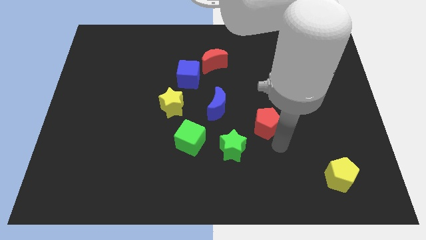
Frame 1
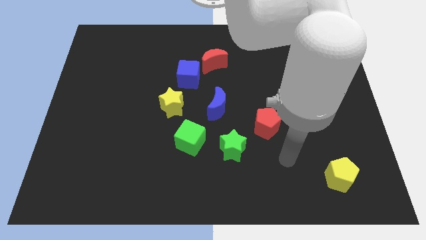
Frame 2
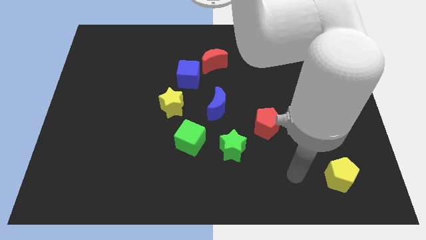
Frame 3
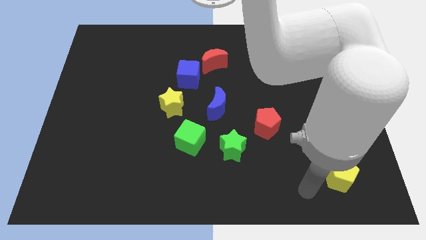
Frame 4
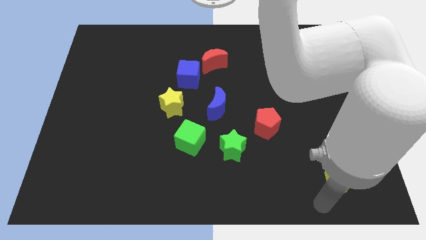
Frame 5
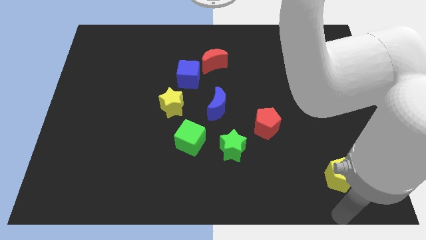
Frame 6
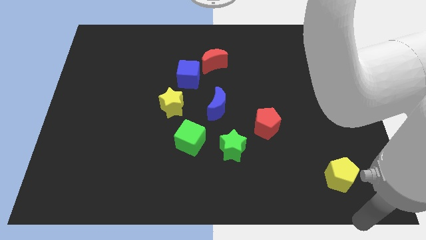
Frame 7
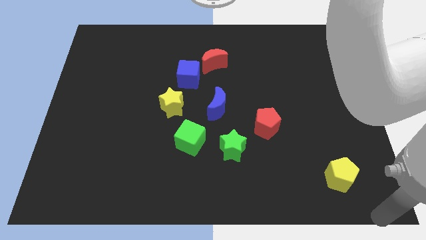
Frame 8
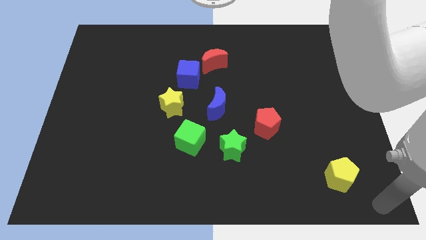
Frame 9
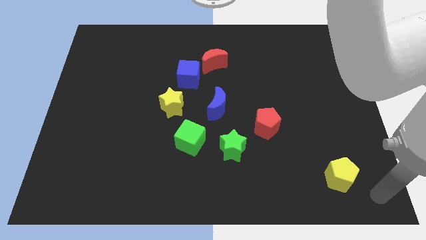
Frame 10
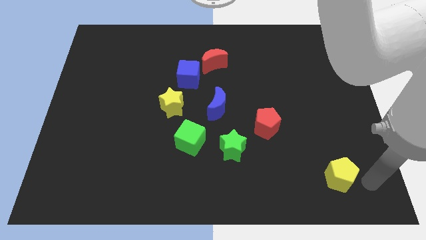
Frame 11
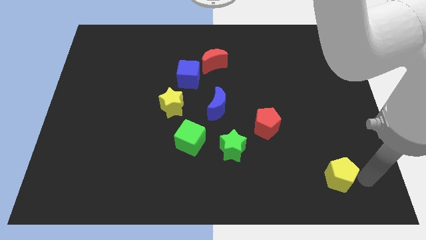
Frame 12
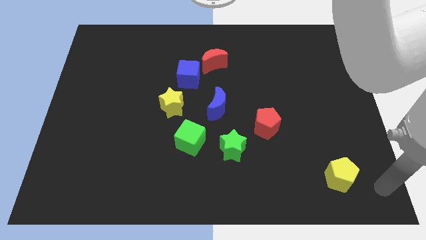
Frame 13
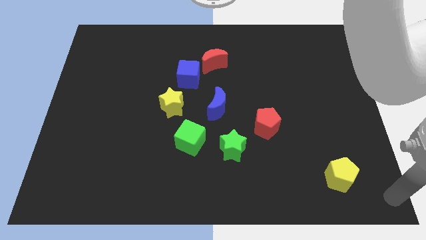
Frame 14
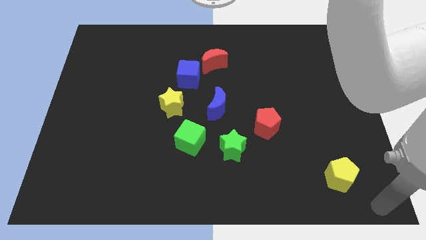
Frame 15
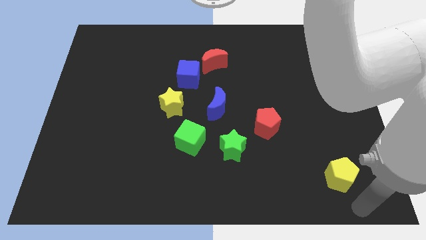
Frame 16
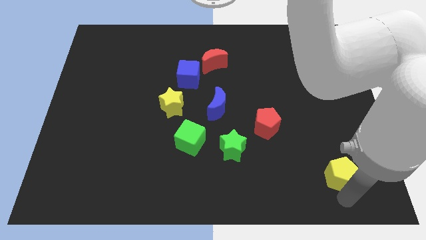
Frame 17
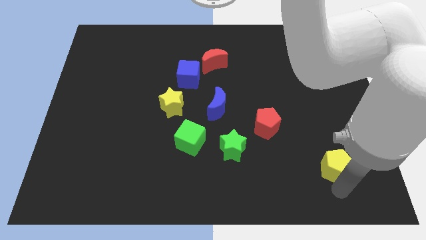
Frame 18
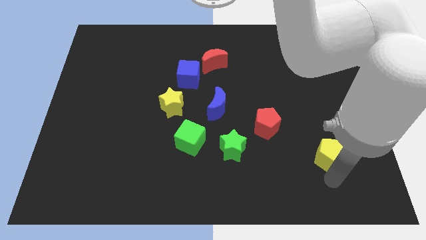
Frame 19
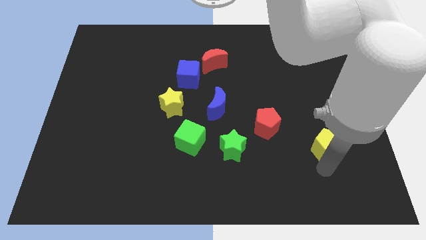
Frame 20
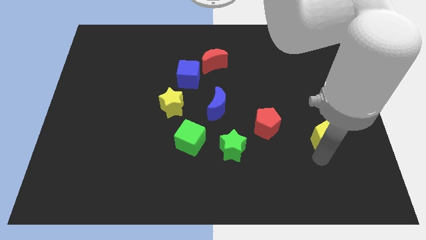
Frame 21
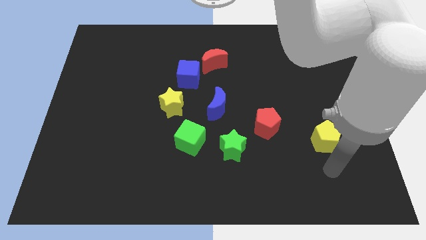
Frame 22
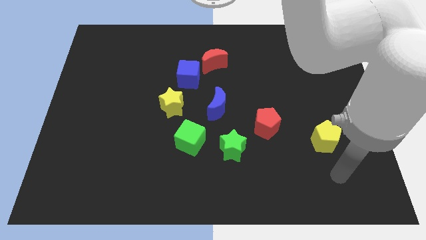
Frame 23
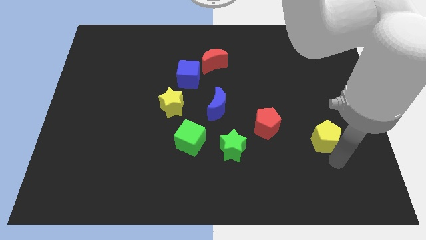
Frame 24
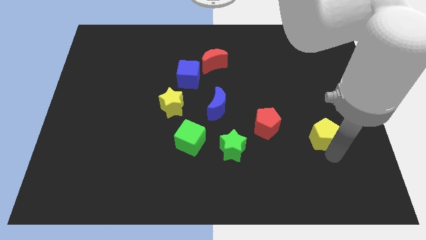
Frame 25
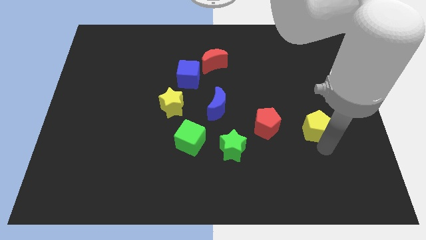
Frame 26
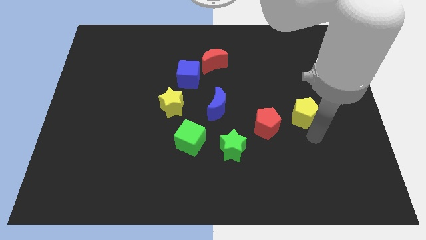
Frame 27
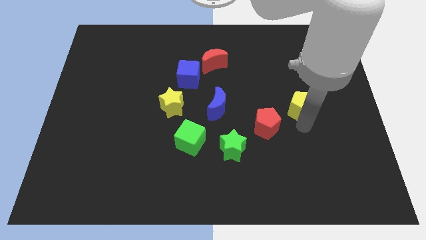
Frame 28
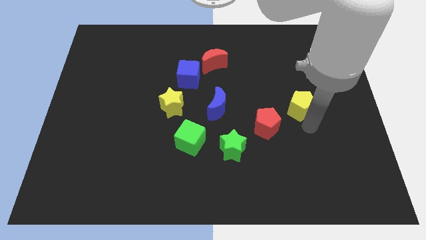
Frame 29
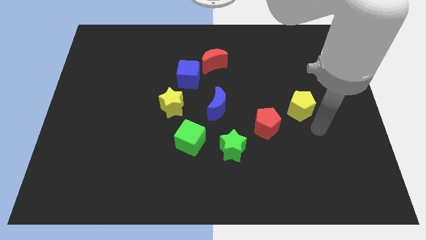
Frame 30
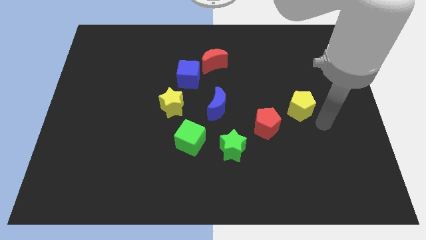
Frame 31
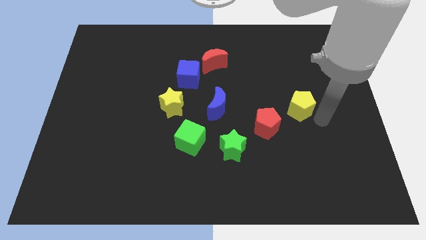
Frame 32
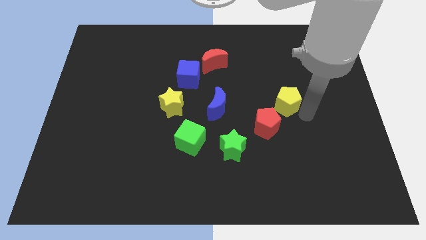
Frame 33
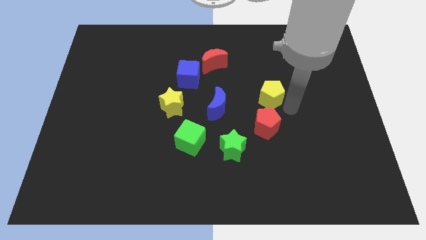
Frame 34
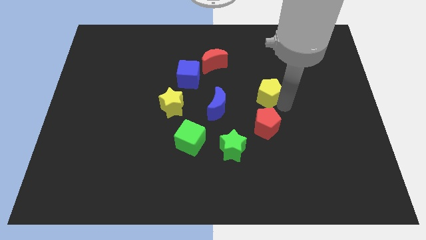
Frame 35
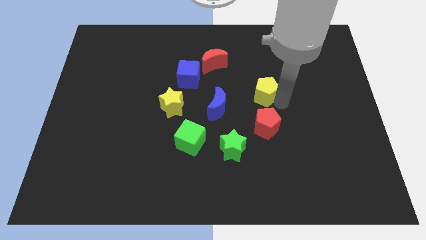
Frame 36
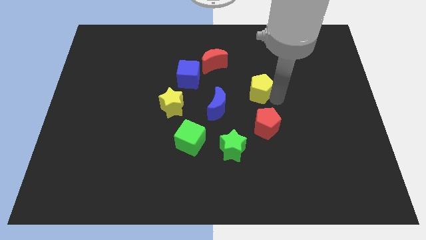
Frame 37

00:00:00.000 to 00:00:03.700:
place the yellow pentagon at the top side of the red pentagon

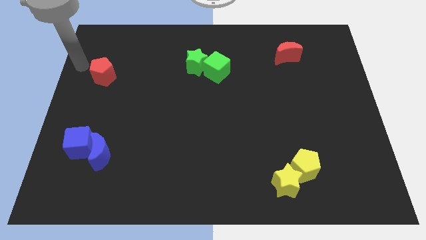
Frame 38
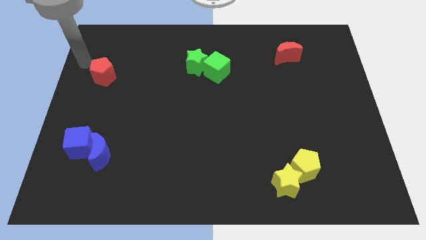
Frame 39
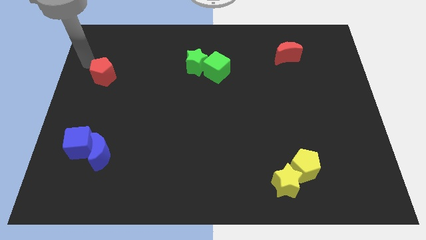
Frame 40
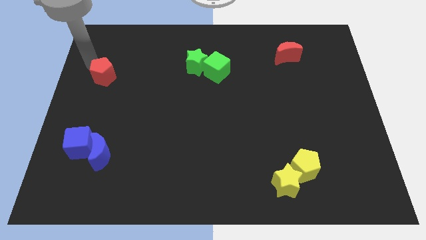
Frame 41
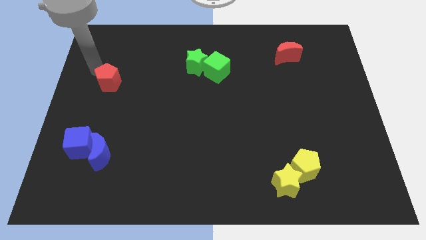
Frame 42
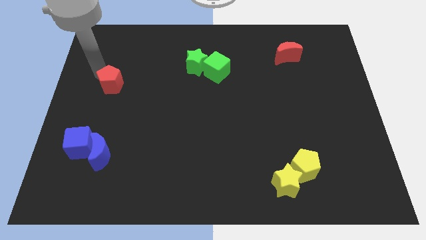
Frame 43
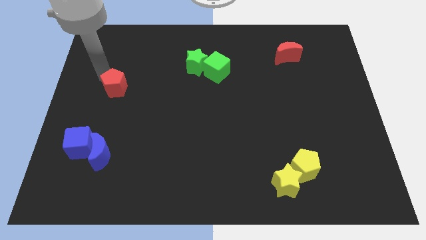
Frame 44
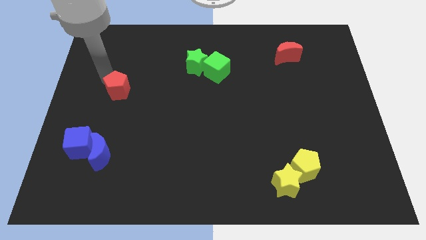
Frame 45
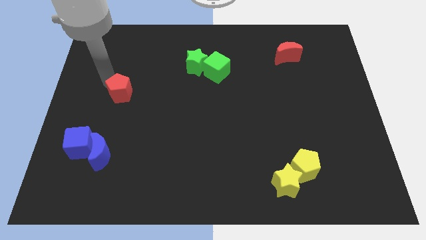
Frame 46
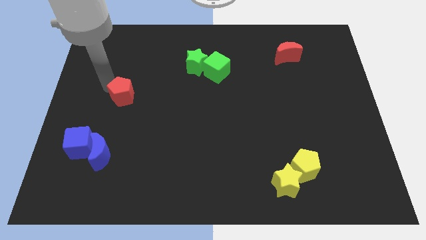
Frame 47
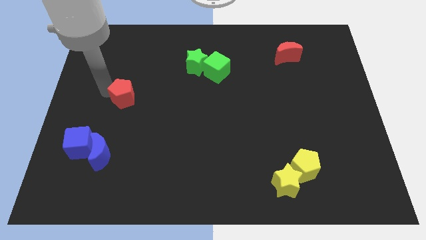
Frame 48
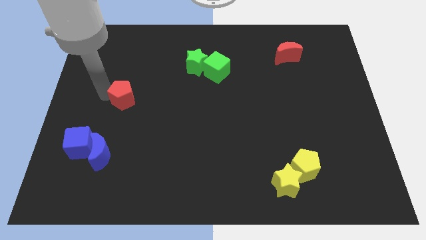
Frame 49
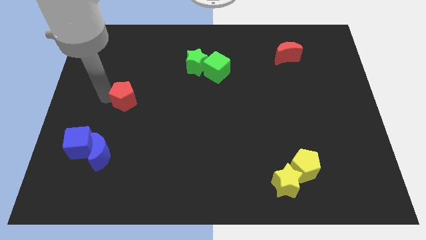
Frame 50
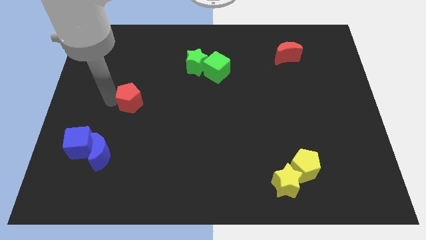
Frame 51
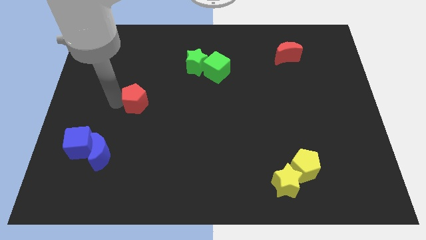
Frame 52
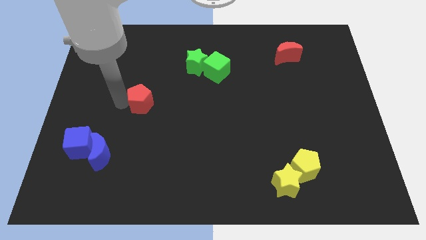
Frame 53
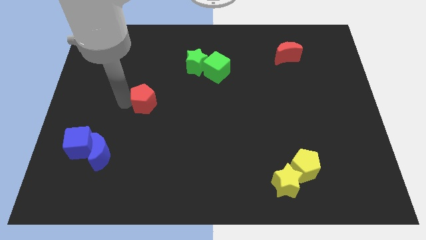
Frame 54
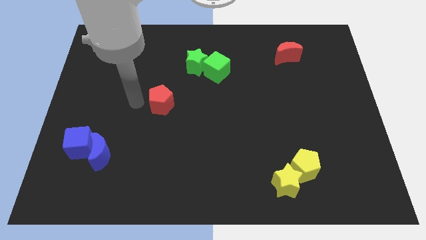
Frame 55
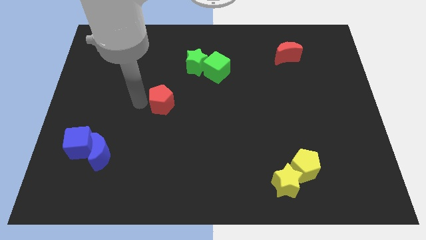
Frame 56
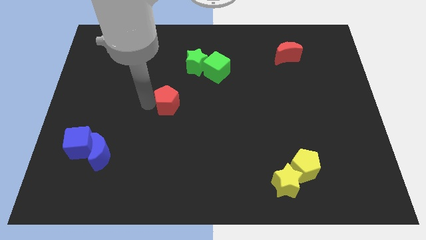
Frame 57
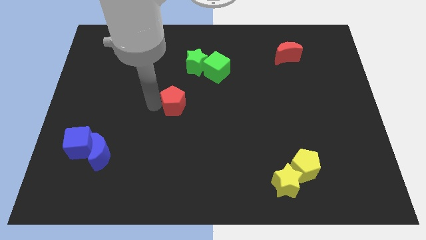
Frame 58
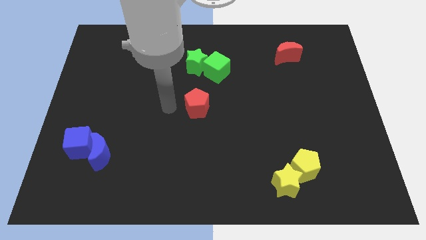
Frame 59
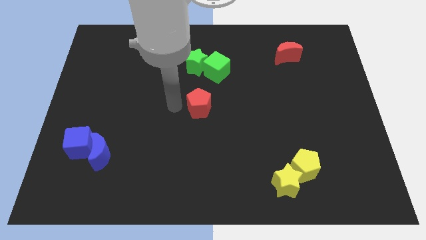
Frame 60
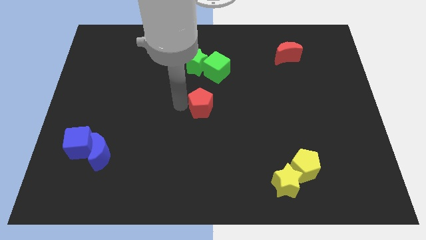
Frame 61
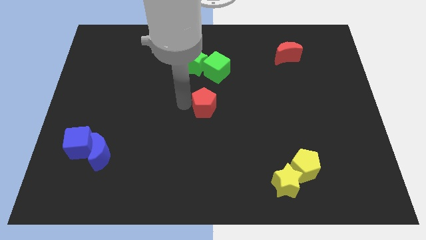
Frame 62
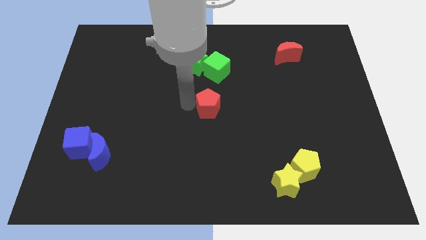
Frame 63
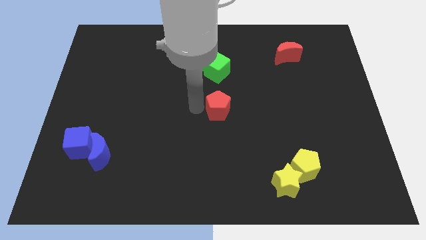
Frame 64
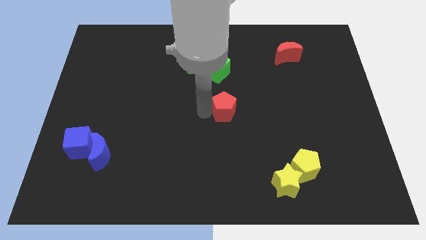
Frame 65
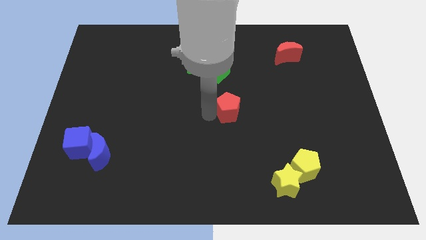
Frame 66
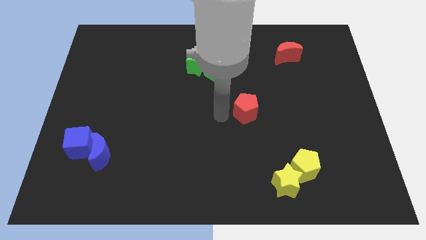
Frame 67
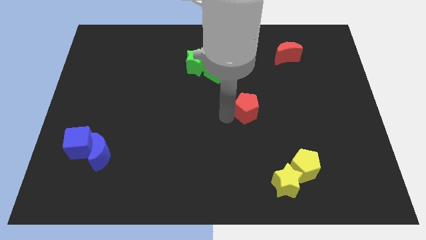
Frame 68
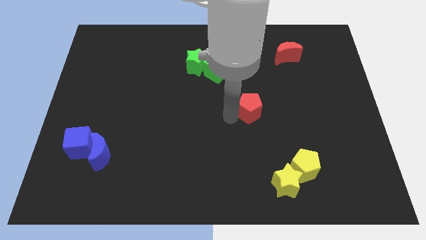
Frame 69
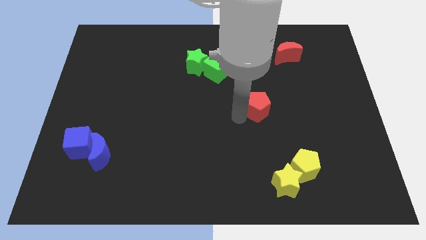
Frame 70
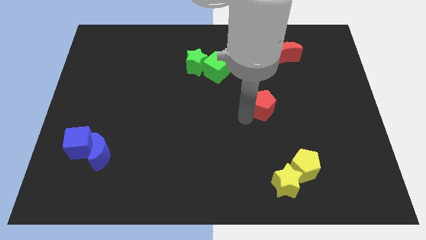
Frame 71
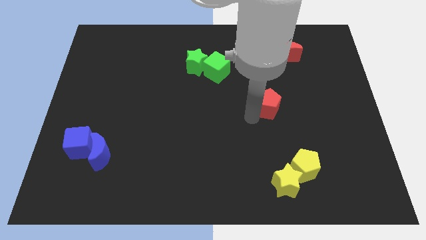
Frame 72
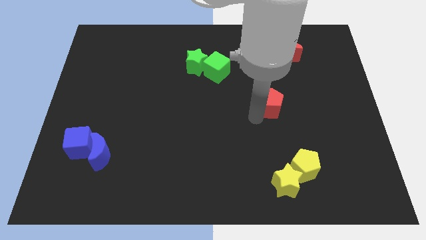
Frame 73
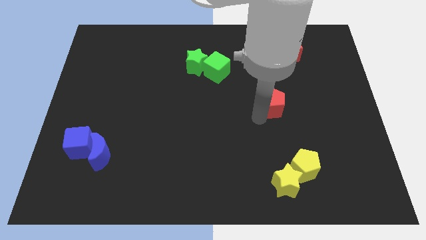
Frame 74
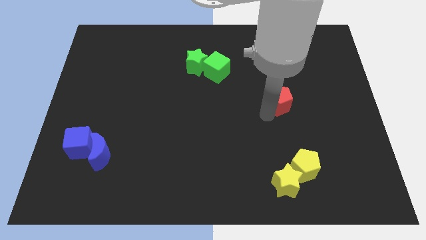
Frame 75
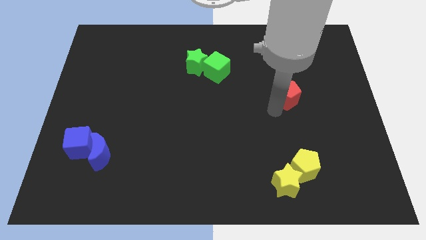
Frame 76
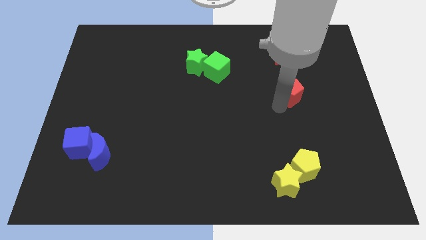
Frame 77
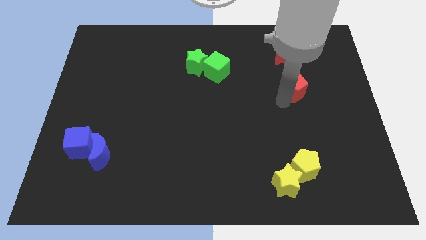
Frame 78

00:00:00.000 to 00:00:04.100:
move the red pentagon underneath the red crescent

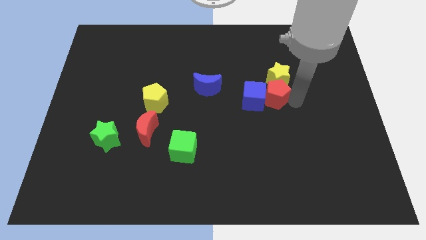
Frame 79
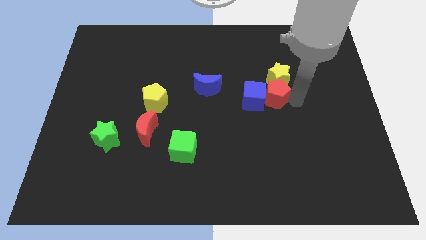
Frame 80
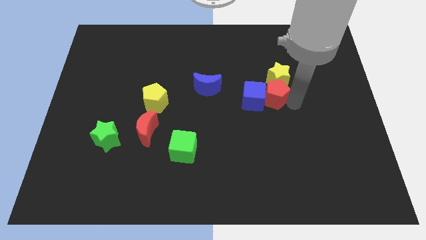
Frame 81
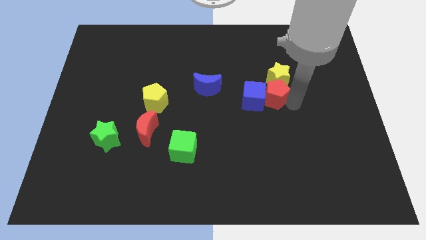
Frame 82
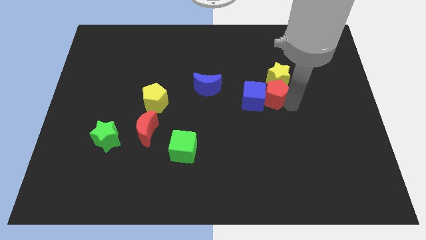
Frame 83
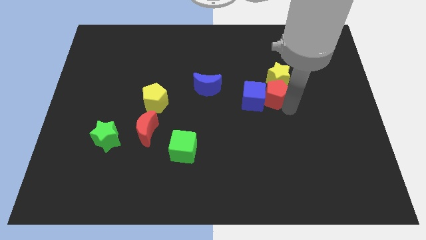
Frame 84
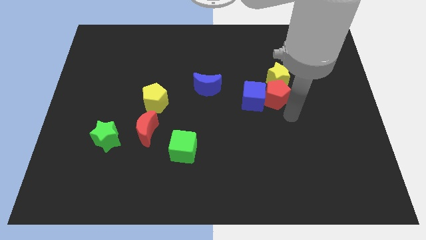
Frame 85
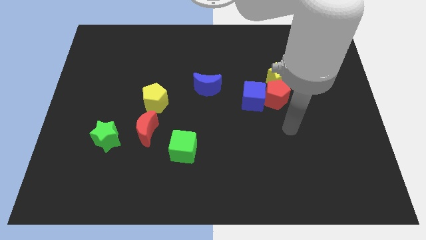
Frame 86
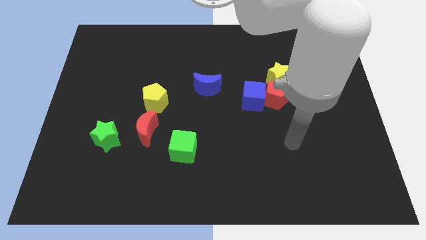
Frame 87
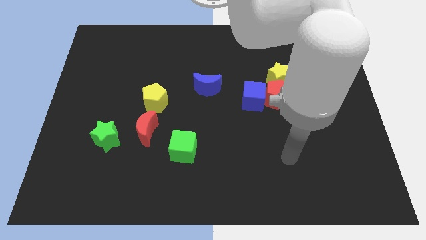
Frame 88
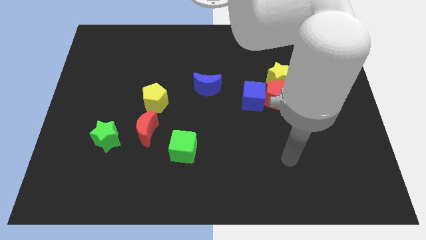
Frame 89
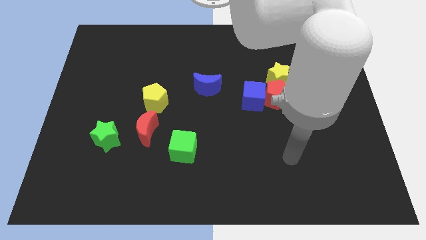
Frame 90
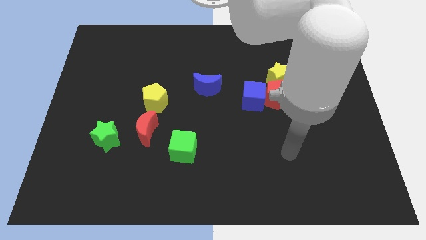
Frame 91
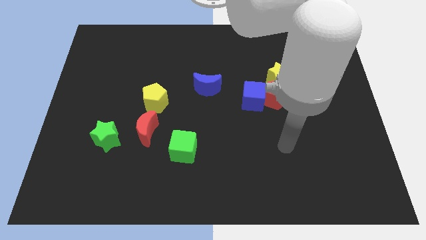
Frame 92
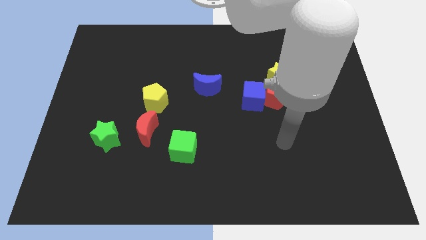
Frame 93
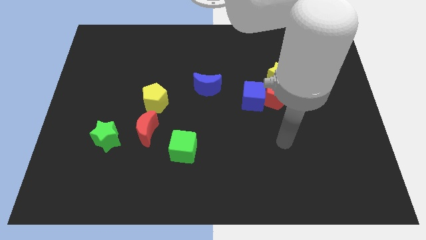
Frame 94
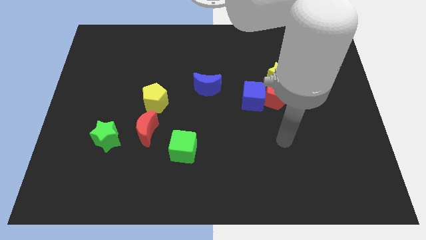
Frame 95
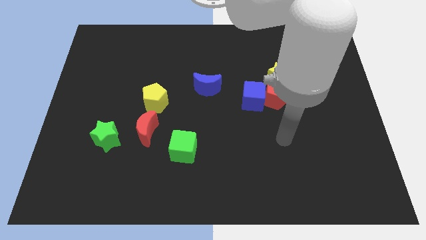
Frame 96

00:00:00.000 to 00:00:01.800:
move the arm away from the red pentagon
